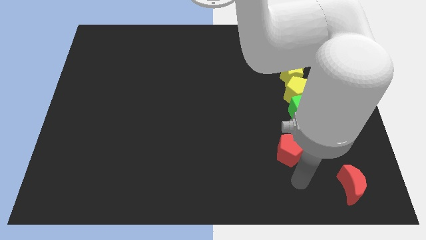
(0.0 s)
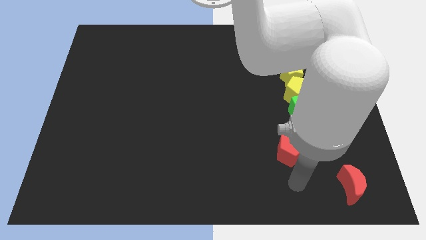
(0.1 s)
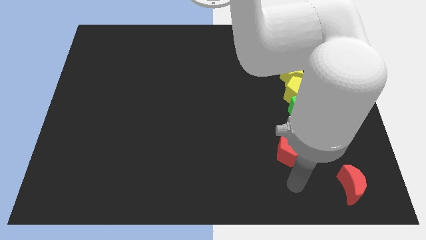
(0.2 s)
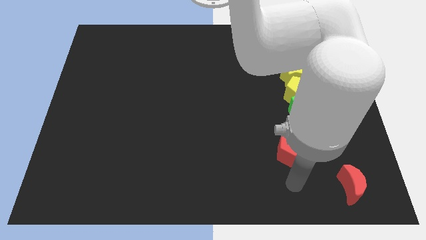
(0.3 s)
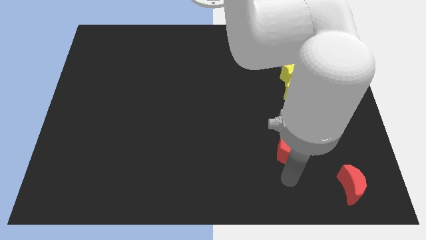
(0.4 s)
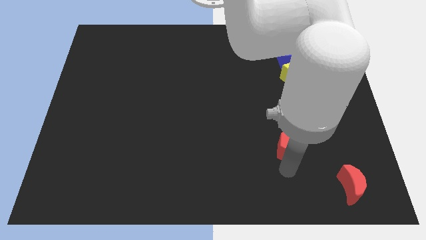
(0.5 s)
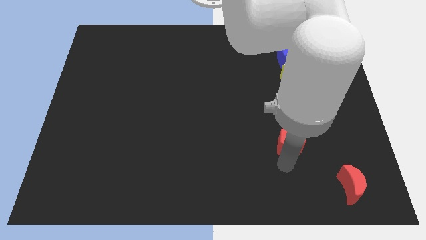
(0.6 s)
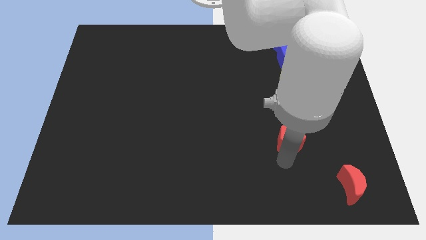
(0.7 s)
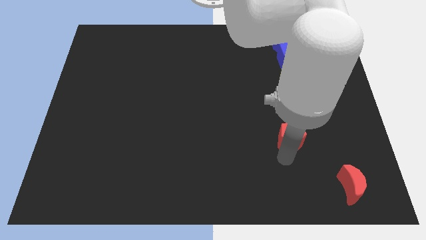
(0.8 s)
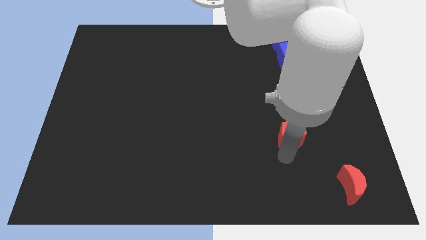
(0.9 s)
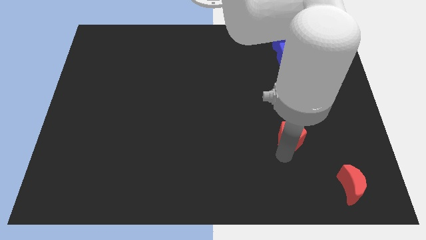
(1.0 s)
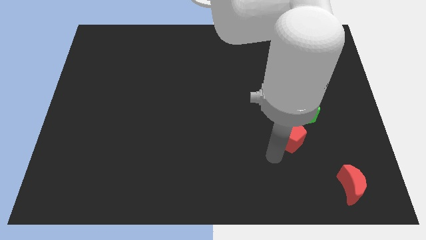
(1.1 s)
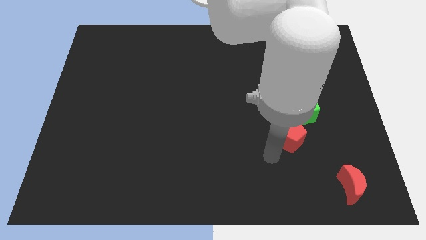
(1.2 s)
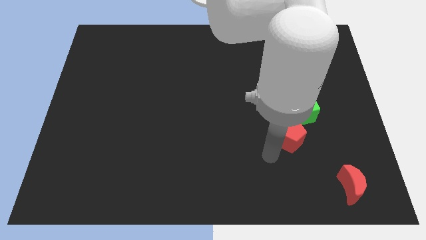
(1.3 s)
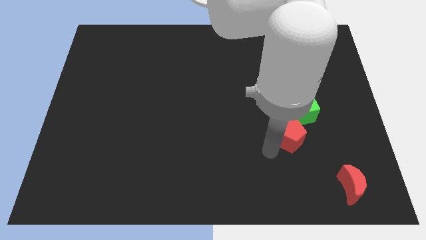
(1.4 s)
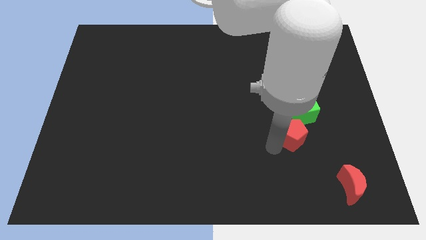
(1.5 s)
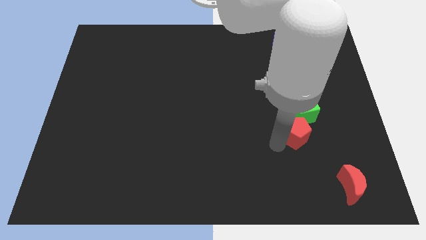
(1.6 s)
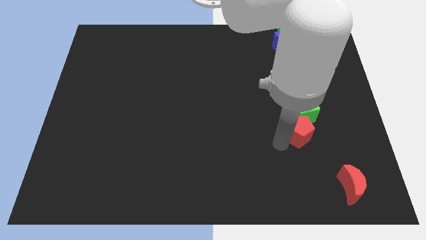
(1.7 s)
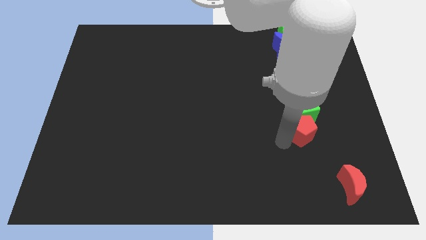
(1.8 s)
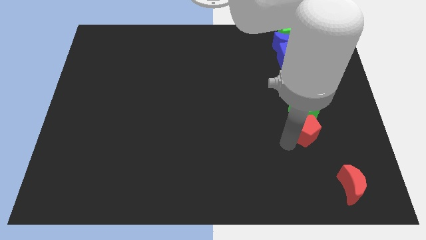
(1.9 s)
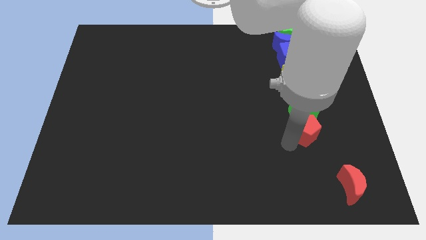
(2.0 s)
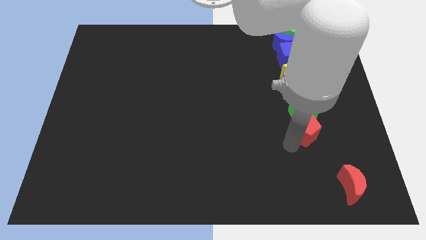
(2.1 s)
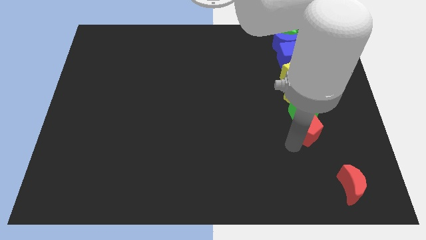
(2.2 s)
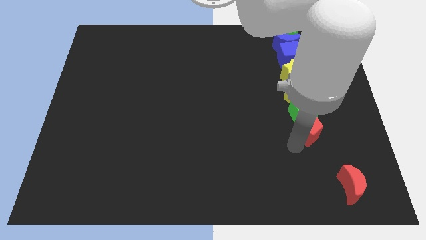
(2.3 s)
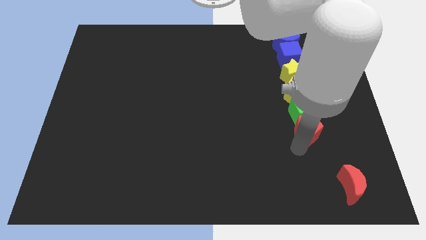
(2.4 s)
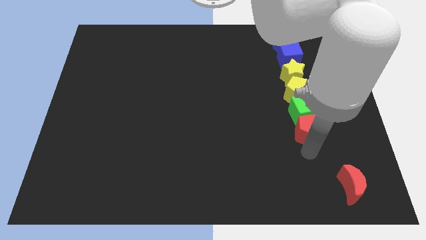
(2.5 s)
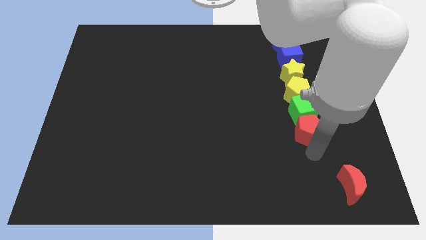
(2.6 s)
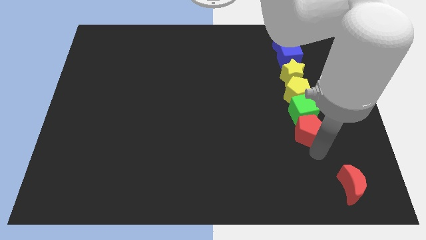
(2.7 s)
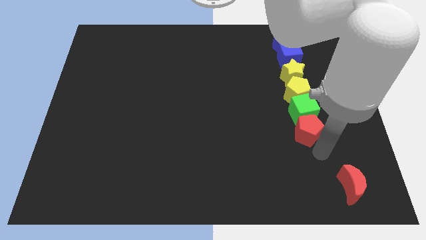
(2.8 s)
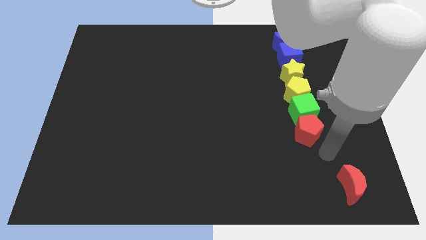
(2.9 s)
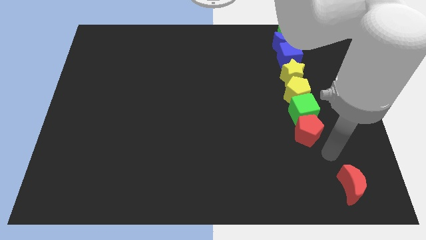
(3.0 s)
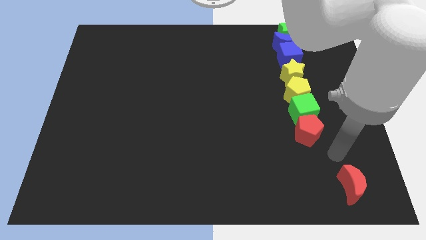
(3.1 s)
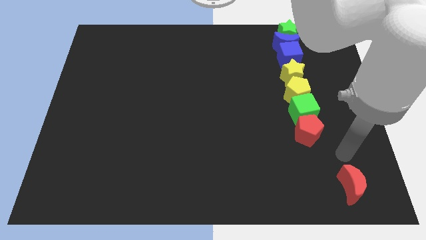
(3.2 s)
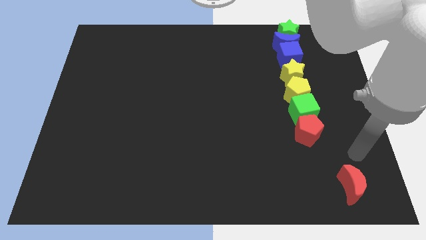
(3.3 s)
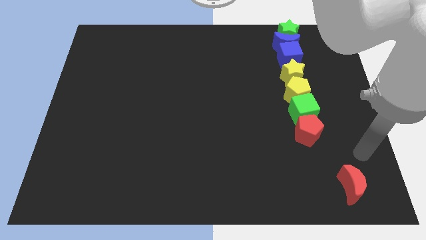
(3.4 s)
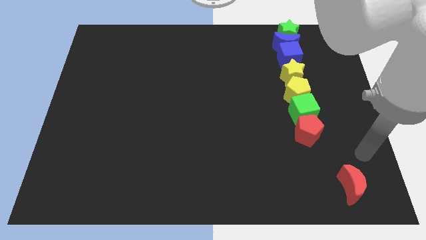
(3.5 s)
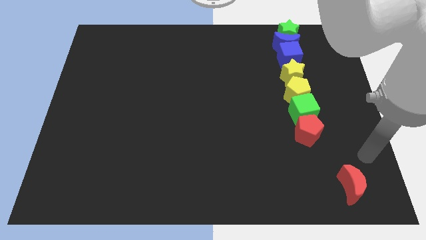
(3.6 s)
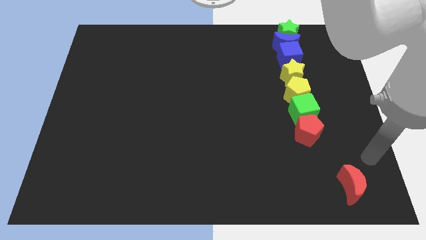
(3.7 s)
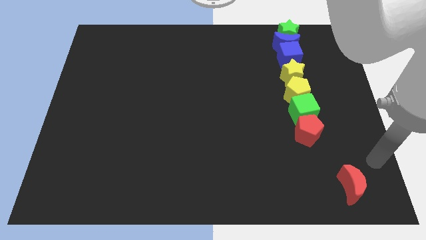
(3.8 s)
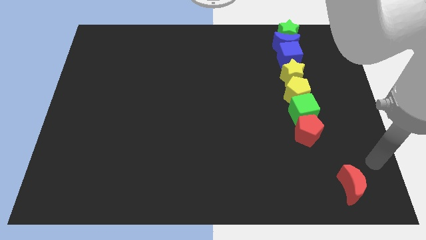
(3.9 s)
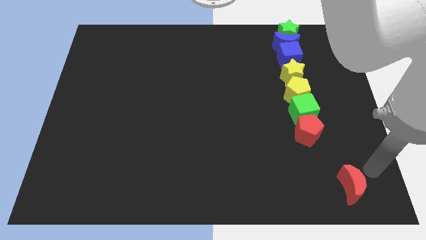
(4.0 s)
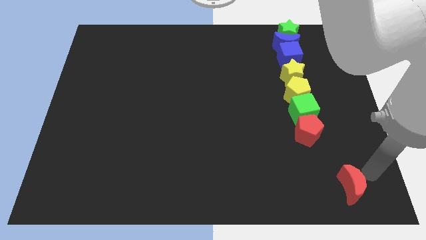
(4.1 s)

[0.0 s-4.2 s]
place the red pentagon bottom to the green cube

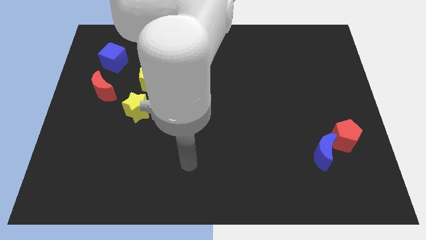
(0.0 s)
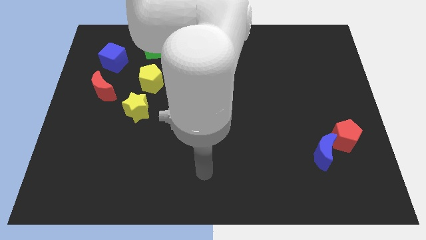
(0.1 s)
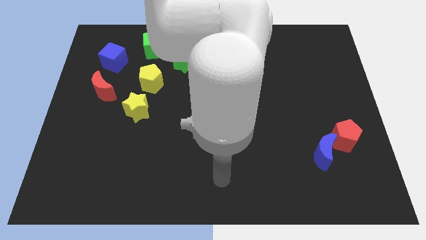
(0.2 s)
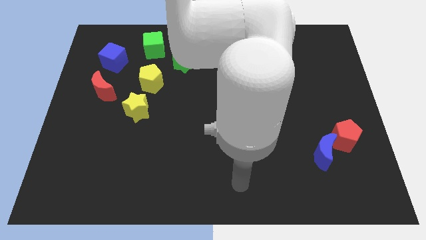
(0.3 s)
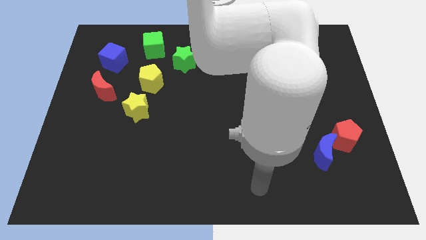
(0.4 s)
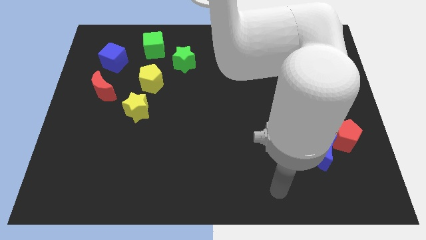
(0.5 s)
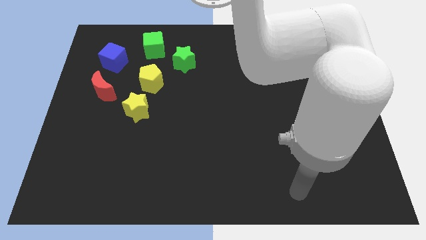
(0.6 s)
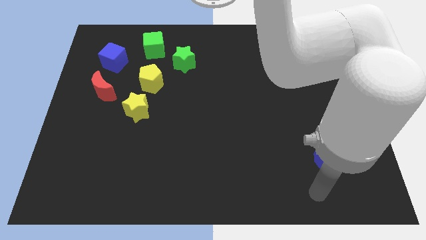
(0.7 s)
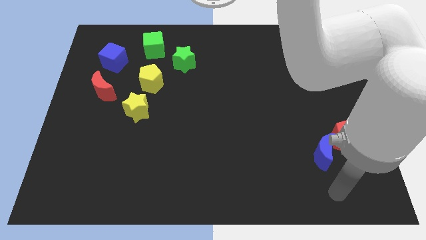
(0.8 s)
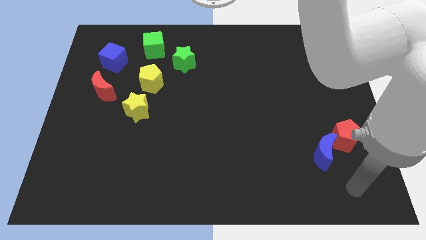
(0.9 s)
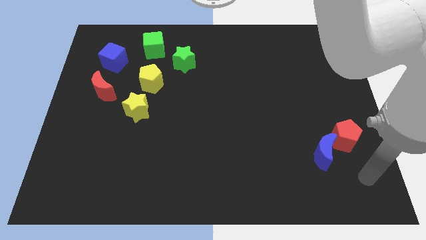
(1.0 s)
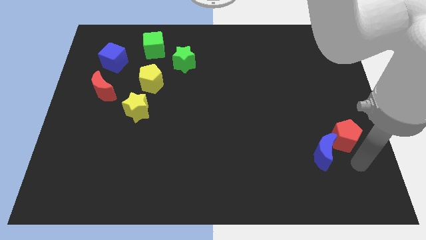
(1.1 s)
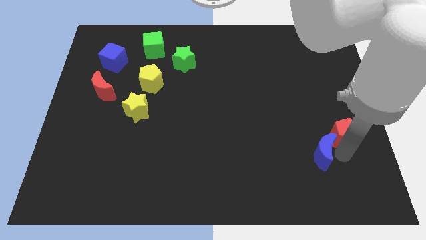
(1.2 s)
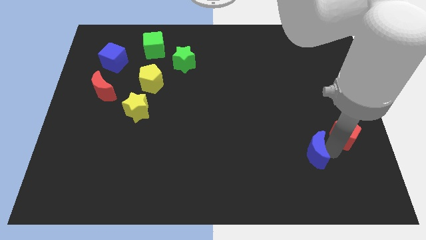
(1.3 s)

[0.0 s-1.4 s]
move your arm towards the blue cube

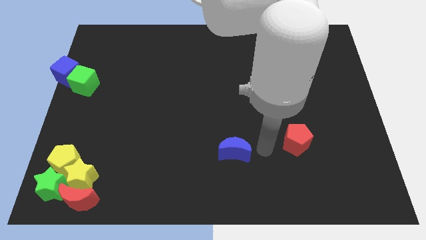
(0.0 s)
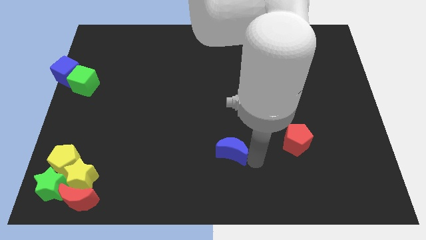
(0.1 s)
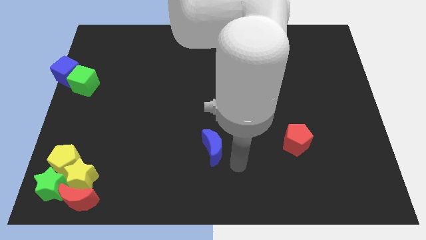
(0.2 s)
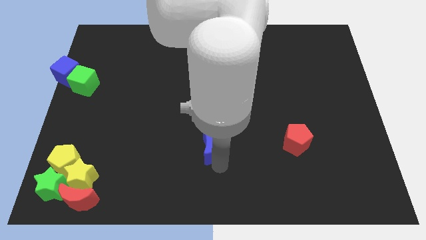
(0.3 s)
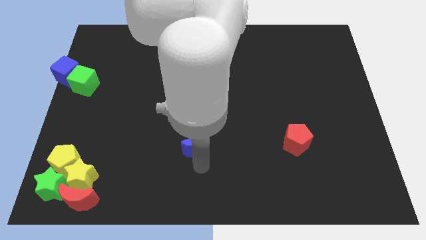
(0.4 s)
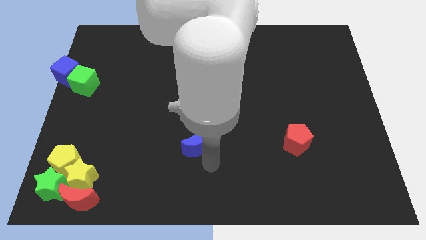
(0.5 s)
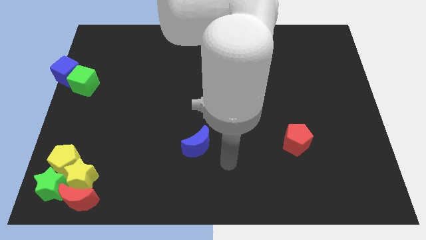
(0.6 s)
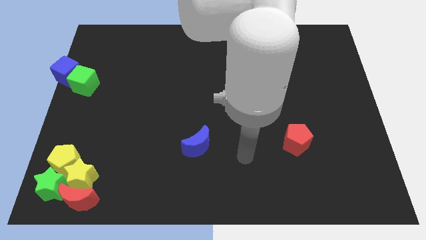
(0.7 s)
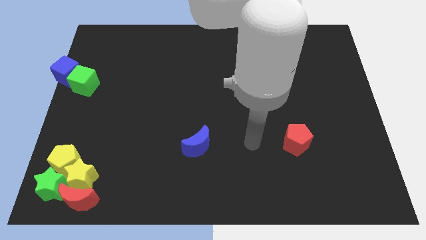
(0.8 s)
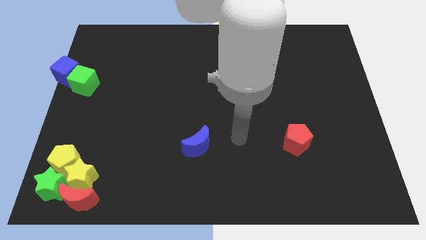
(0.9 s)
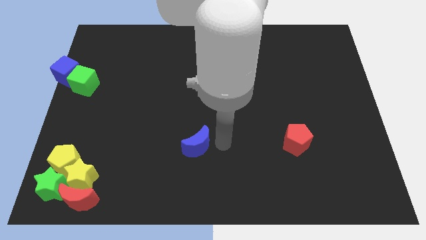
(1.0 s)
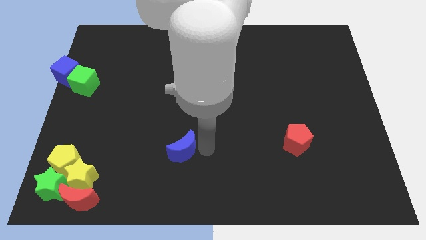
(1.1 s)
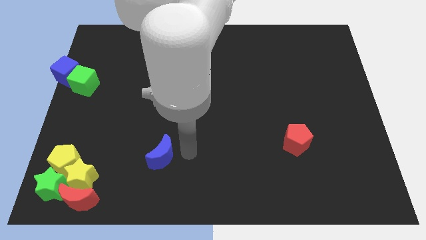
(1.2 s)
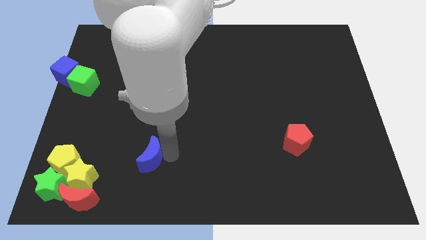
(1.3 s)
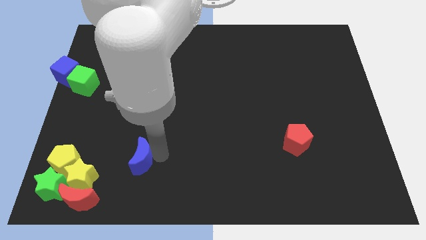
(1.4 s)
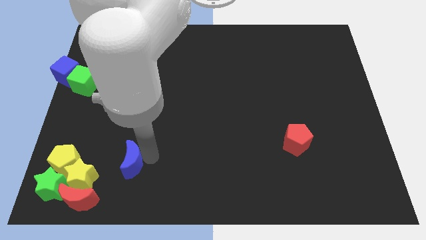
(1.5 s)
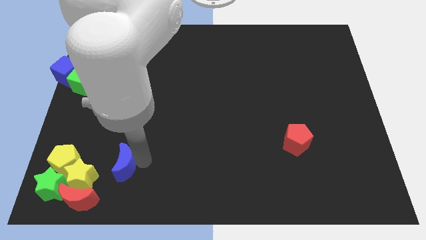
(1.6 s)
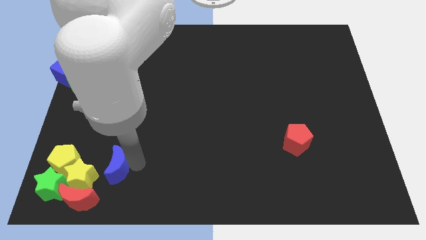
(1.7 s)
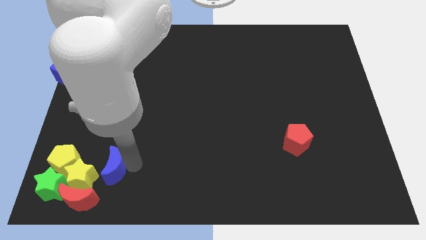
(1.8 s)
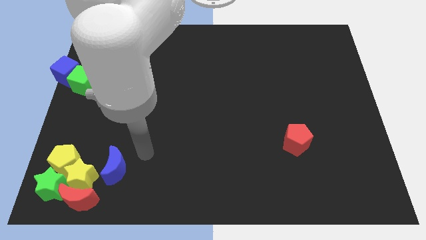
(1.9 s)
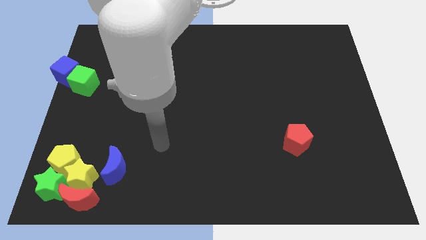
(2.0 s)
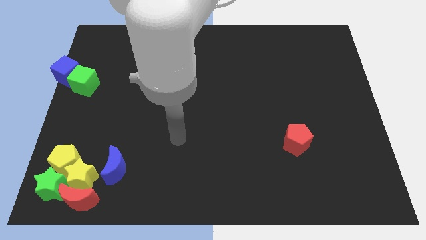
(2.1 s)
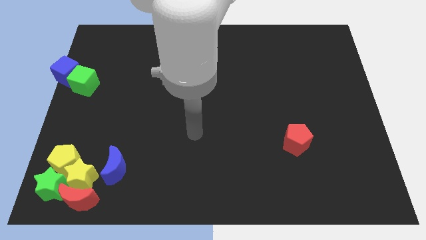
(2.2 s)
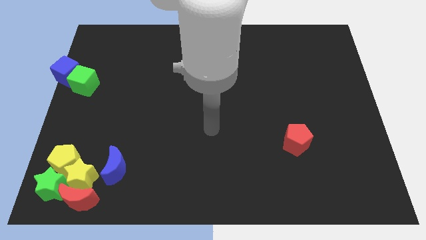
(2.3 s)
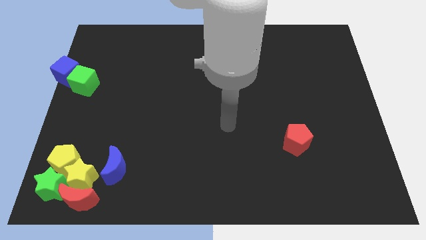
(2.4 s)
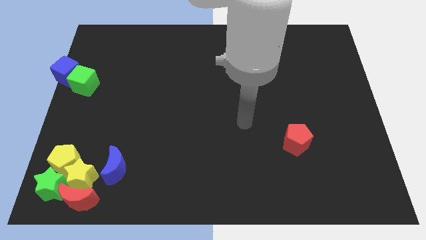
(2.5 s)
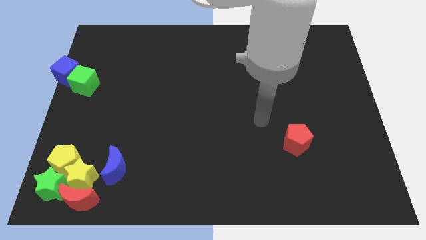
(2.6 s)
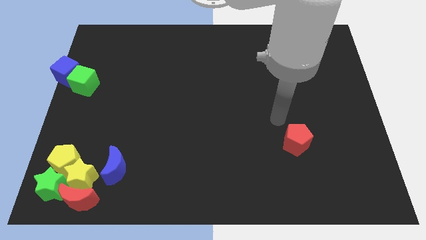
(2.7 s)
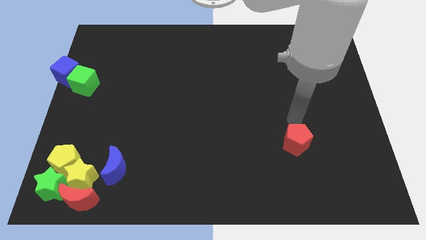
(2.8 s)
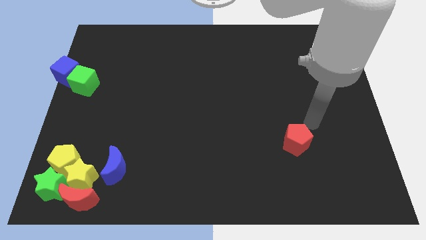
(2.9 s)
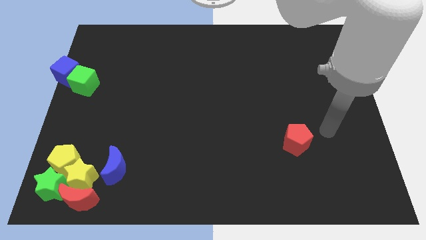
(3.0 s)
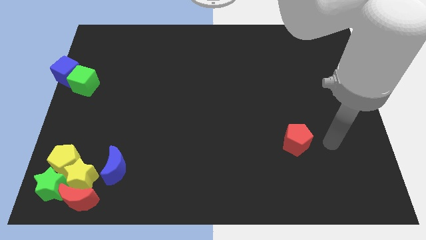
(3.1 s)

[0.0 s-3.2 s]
slide the blue moon to the right of yellow star

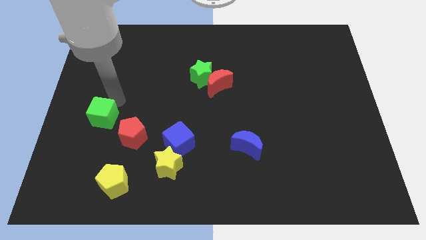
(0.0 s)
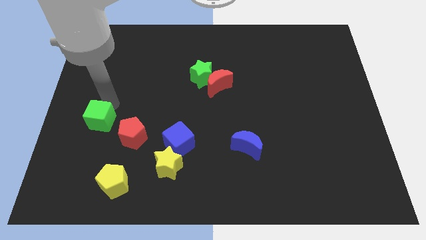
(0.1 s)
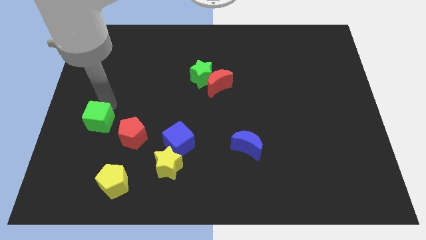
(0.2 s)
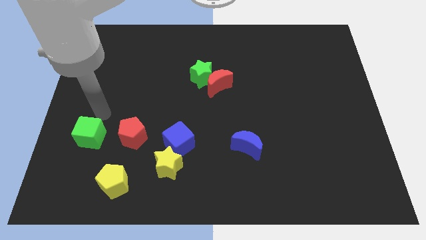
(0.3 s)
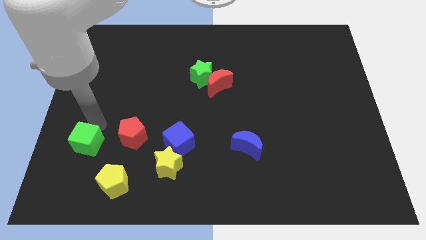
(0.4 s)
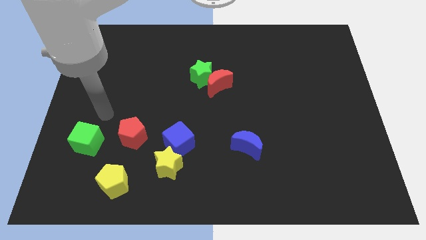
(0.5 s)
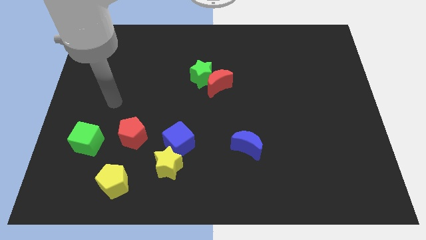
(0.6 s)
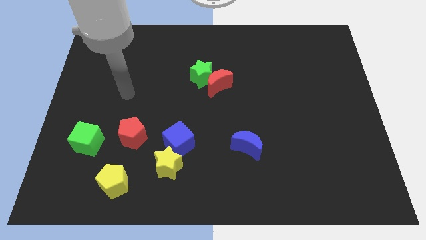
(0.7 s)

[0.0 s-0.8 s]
place the green cube diagonally above the yellow pentagon
